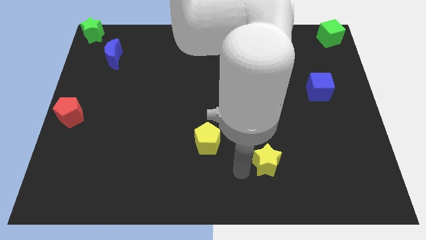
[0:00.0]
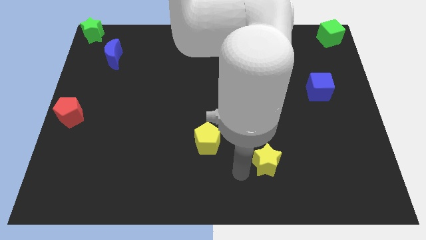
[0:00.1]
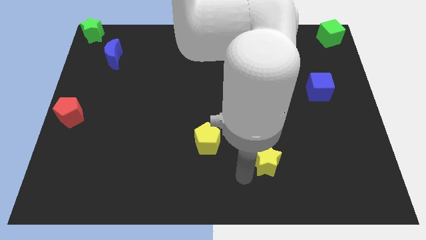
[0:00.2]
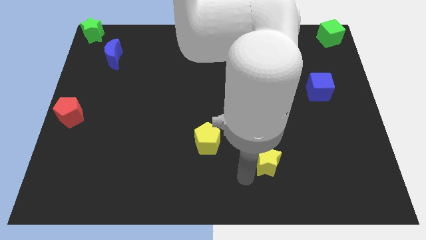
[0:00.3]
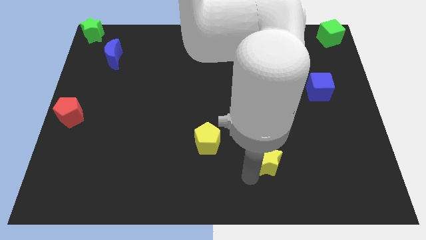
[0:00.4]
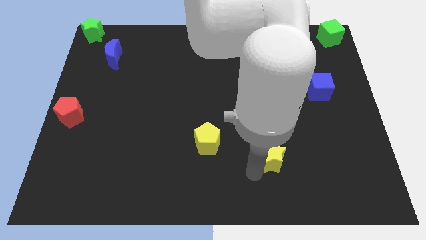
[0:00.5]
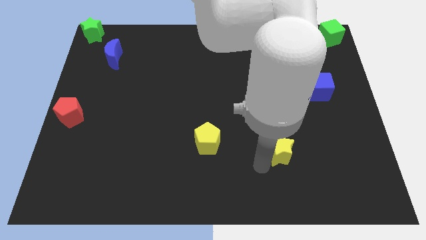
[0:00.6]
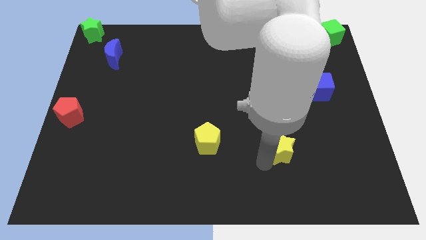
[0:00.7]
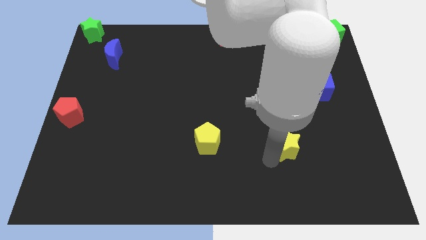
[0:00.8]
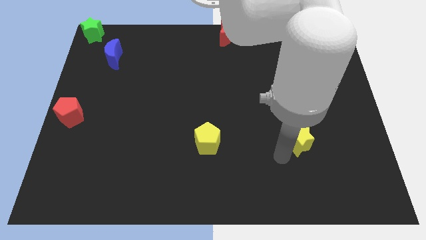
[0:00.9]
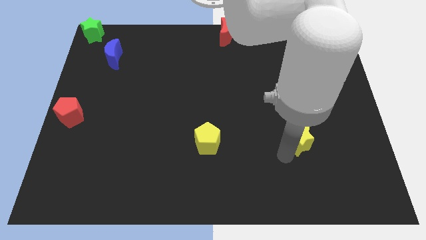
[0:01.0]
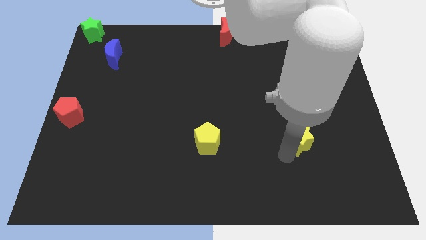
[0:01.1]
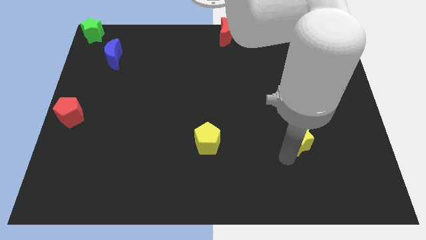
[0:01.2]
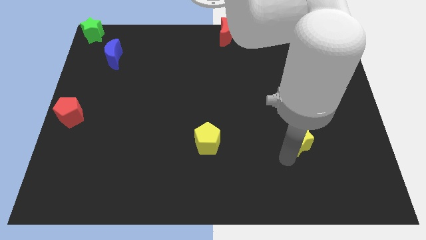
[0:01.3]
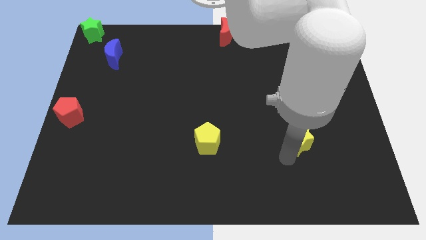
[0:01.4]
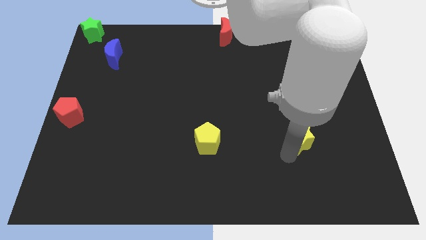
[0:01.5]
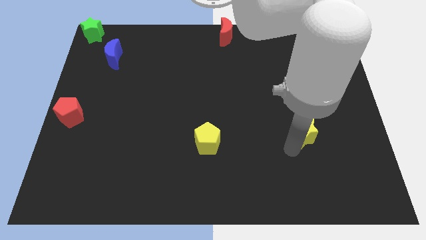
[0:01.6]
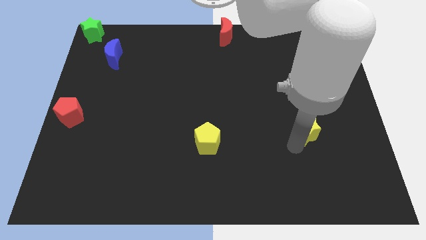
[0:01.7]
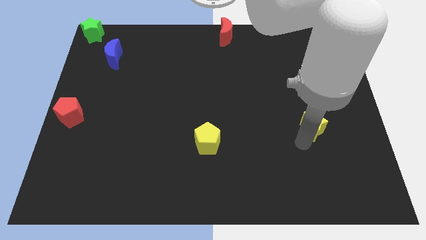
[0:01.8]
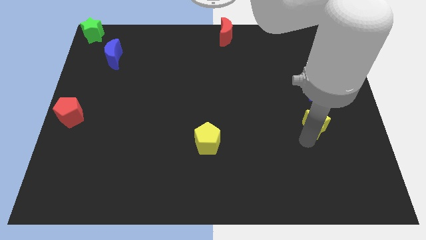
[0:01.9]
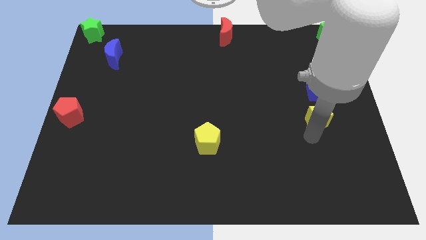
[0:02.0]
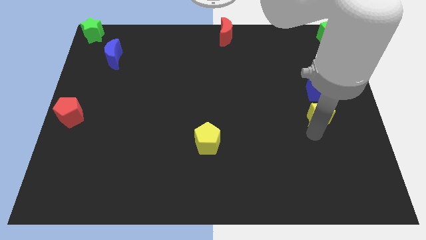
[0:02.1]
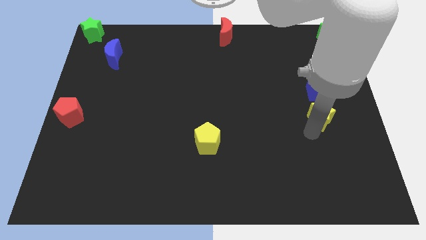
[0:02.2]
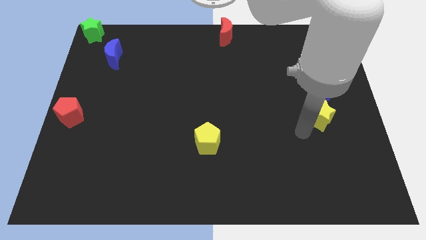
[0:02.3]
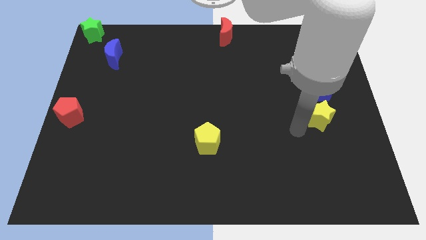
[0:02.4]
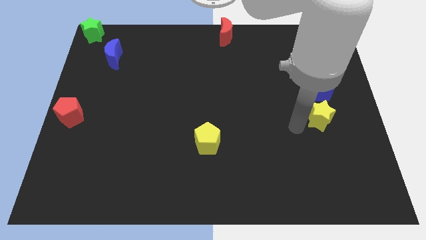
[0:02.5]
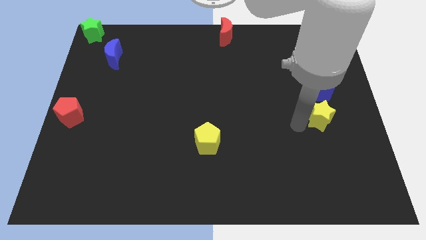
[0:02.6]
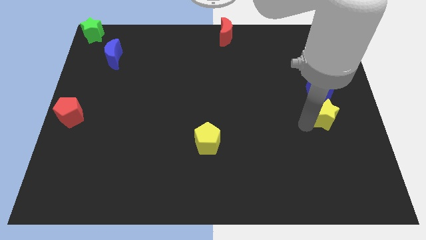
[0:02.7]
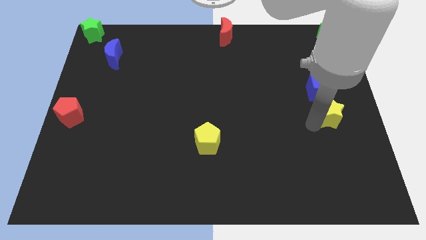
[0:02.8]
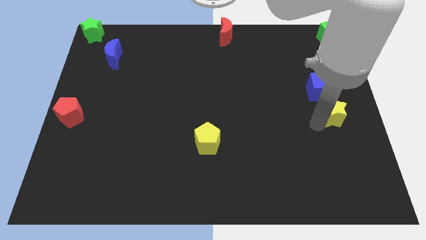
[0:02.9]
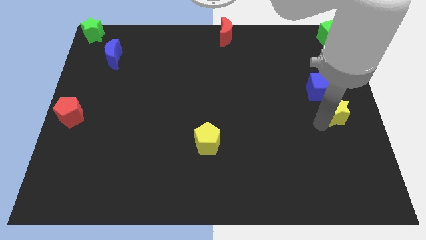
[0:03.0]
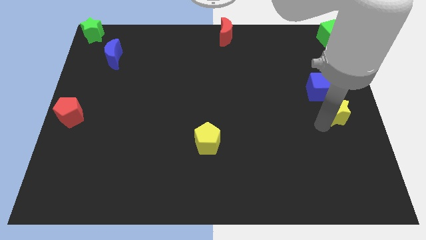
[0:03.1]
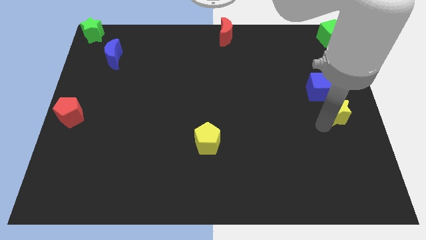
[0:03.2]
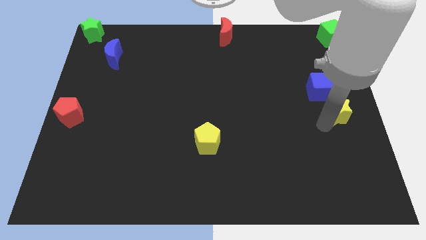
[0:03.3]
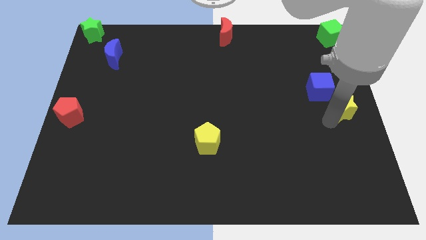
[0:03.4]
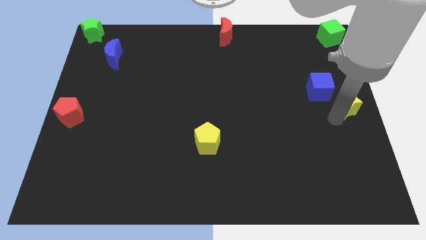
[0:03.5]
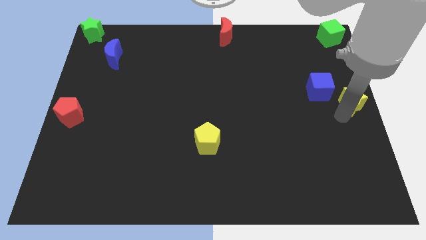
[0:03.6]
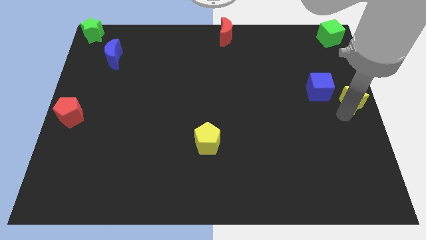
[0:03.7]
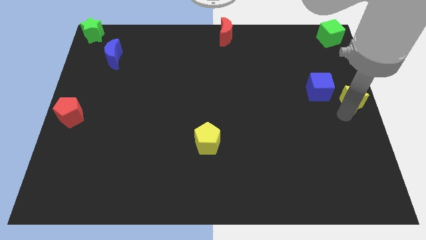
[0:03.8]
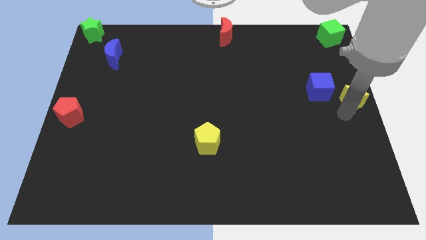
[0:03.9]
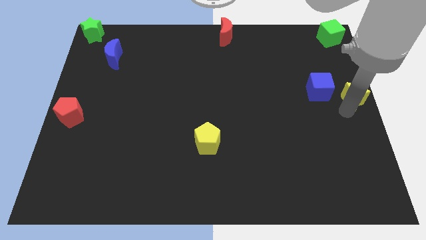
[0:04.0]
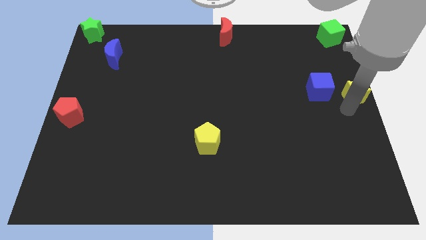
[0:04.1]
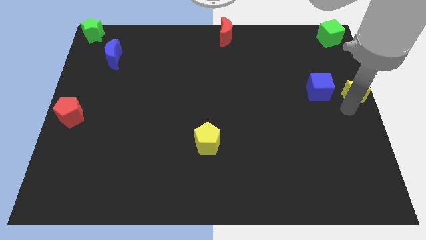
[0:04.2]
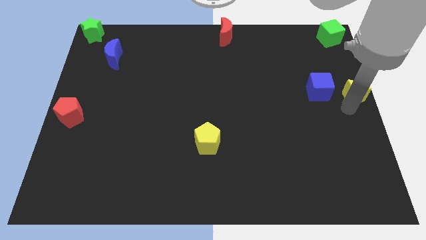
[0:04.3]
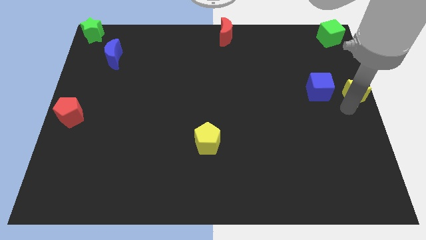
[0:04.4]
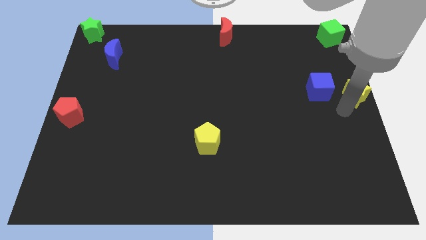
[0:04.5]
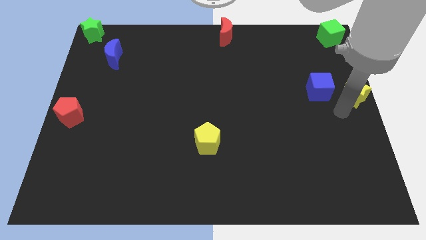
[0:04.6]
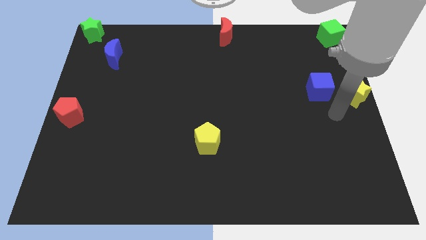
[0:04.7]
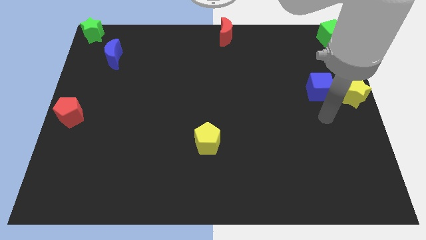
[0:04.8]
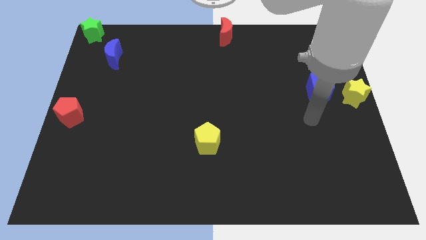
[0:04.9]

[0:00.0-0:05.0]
place yellow star to the right center of the board

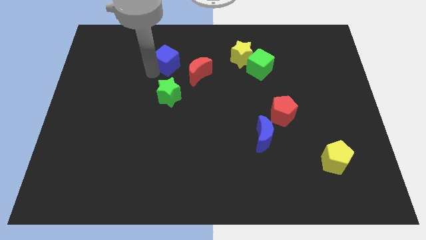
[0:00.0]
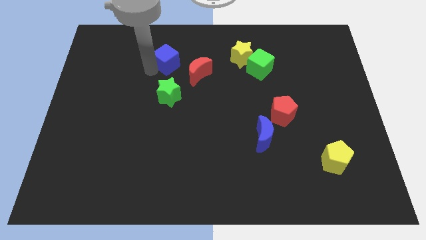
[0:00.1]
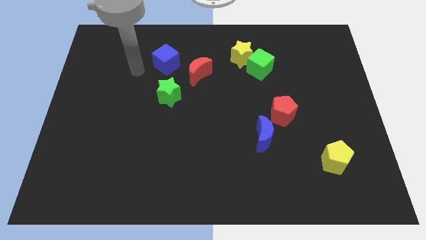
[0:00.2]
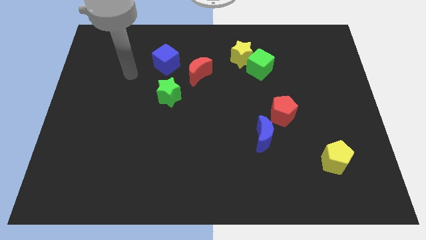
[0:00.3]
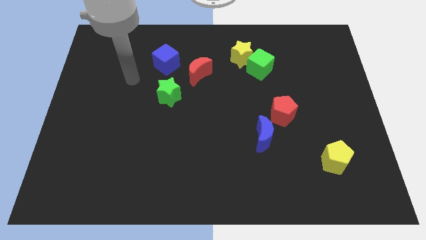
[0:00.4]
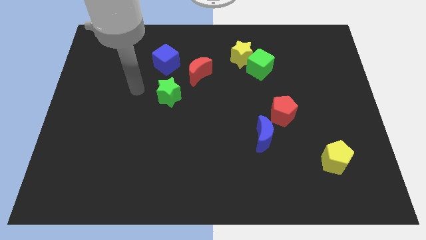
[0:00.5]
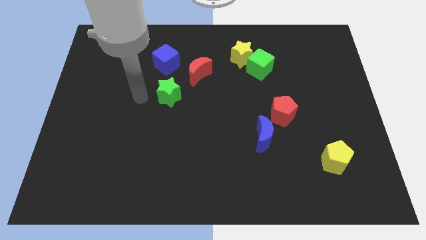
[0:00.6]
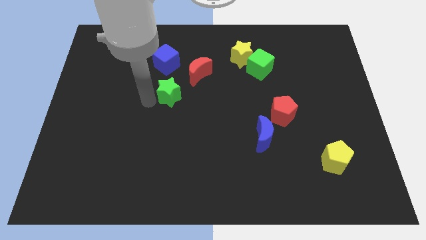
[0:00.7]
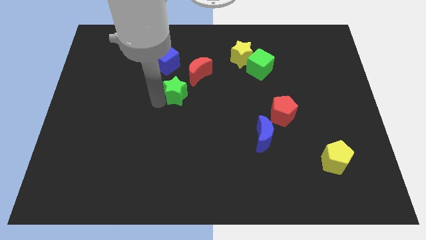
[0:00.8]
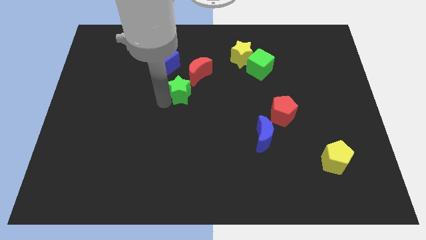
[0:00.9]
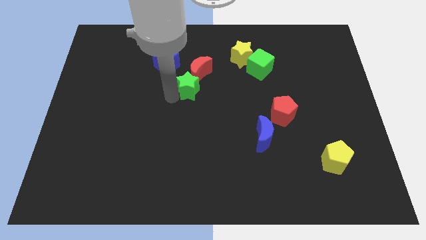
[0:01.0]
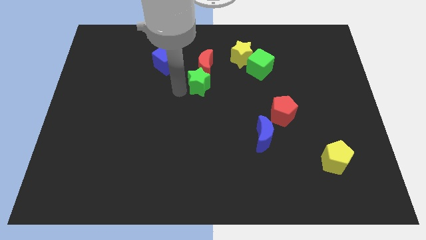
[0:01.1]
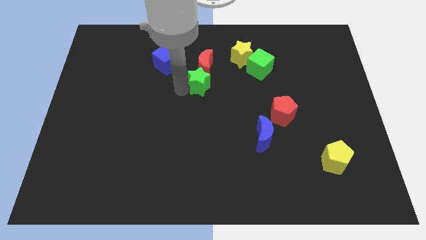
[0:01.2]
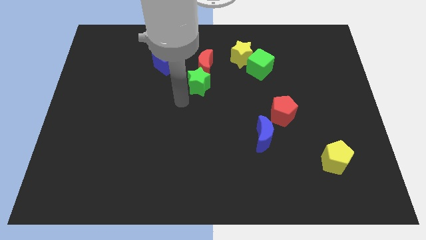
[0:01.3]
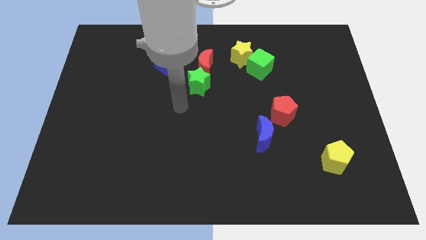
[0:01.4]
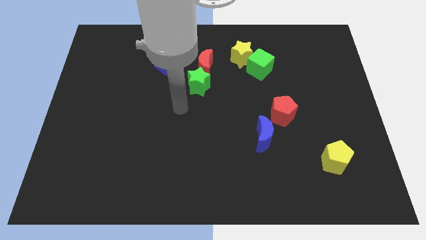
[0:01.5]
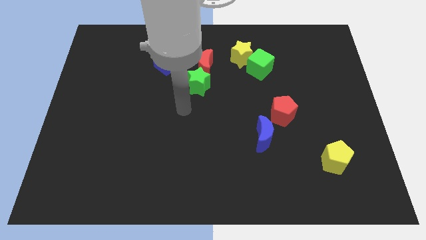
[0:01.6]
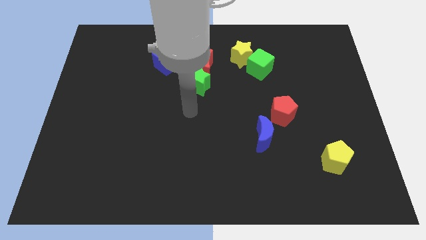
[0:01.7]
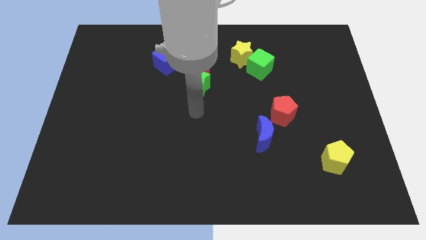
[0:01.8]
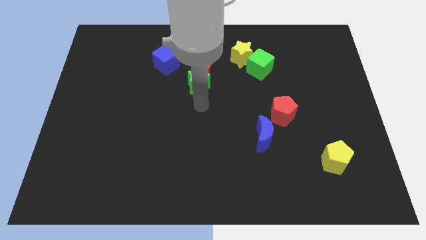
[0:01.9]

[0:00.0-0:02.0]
push the green star below into the red moon

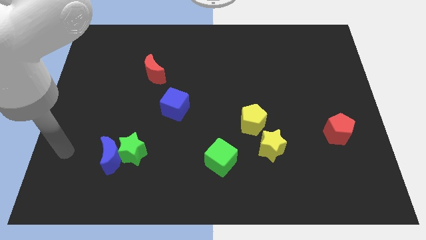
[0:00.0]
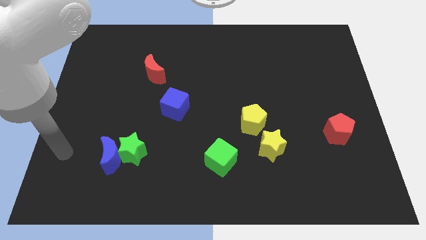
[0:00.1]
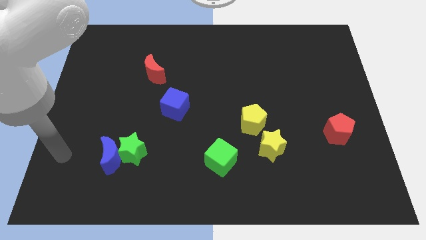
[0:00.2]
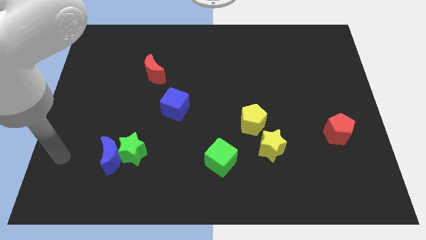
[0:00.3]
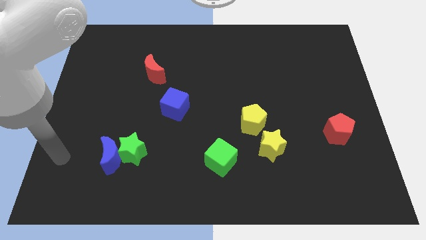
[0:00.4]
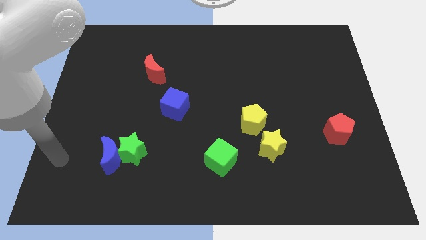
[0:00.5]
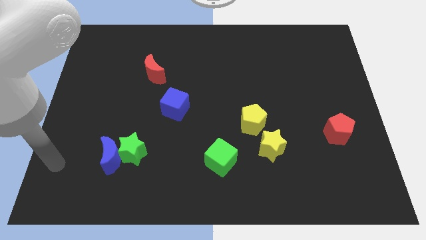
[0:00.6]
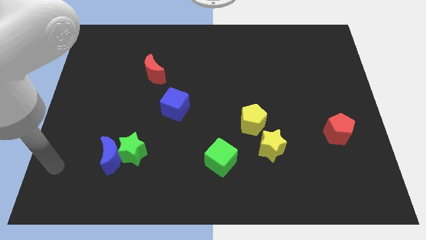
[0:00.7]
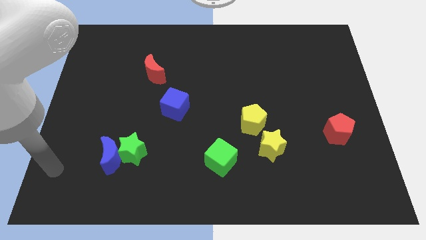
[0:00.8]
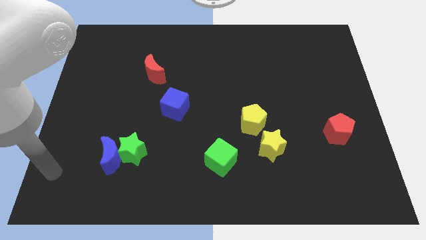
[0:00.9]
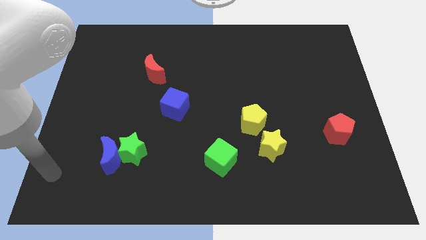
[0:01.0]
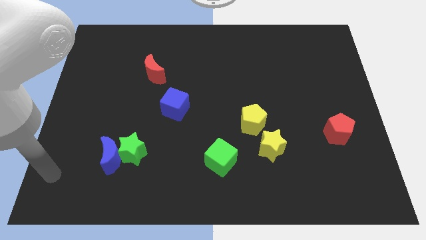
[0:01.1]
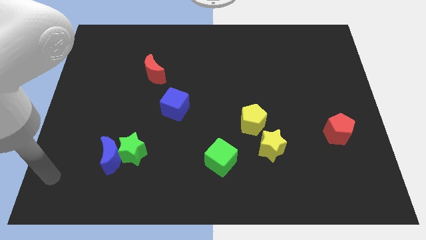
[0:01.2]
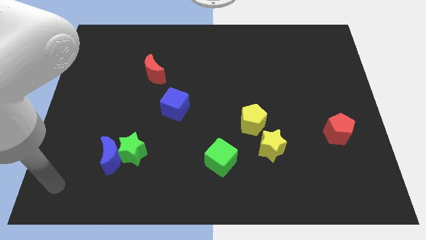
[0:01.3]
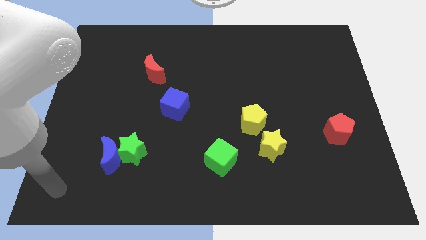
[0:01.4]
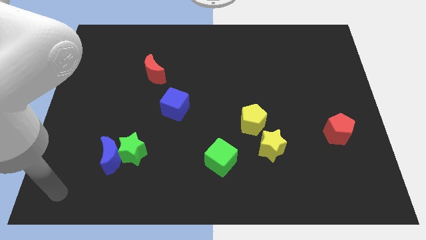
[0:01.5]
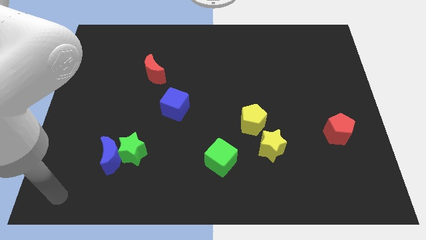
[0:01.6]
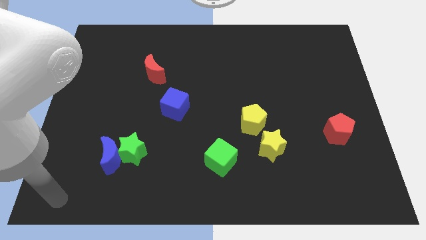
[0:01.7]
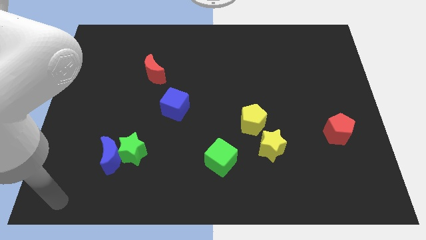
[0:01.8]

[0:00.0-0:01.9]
move the arm to the bottom left of the board
